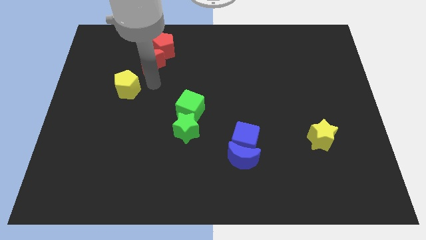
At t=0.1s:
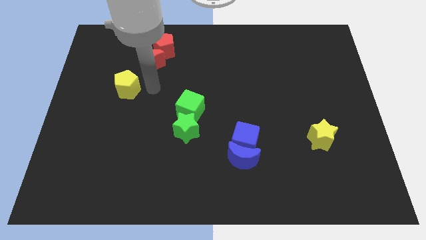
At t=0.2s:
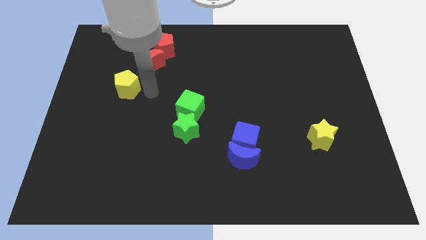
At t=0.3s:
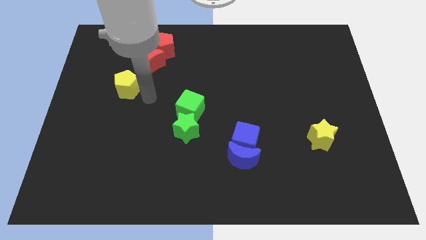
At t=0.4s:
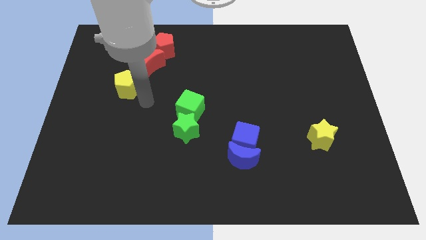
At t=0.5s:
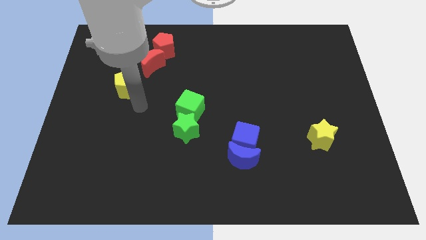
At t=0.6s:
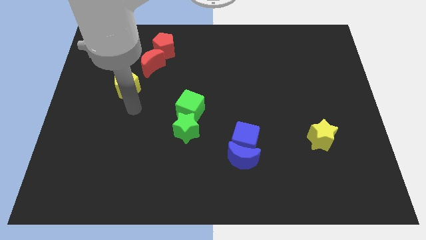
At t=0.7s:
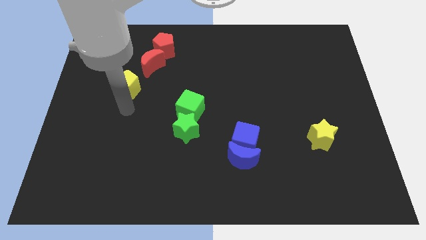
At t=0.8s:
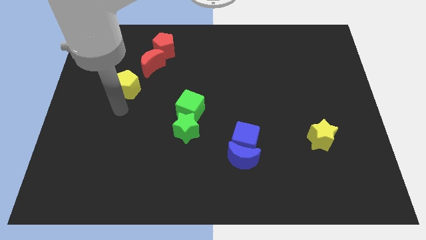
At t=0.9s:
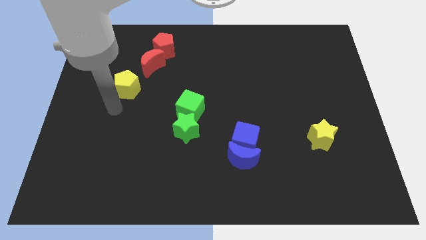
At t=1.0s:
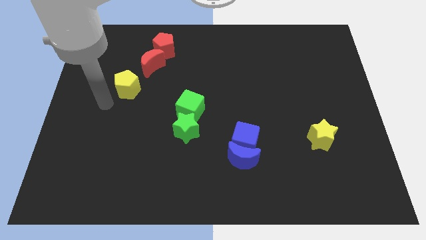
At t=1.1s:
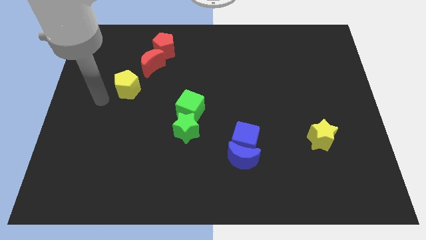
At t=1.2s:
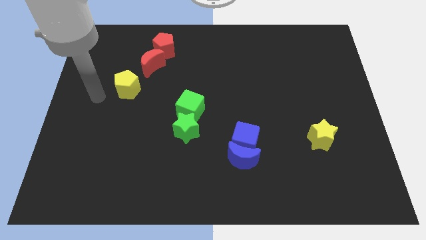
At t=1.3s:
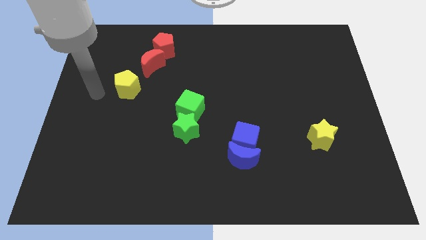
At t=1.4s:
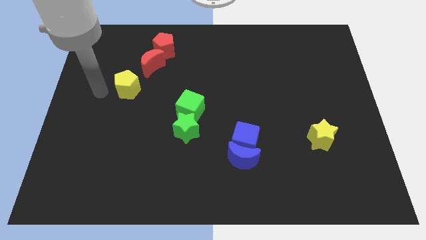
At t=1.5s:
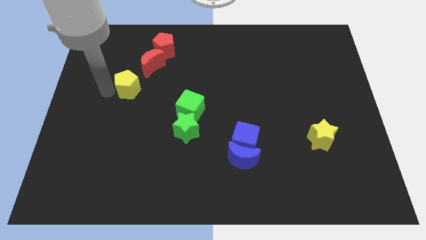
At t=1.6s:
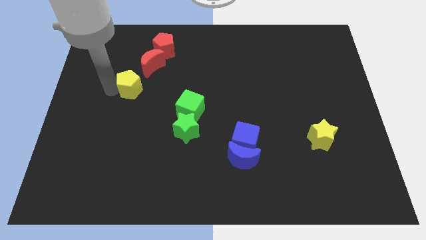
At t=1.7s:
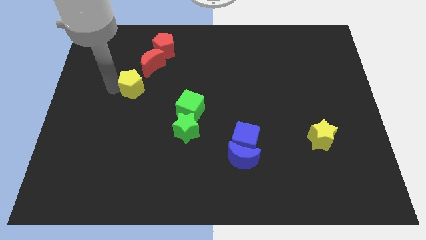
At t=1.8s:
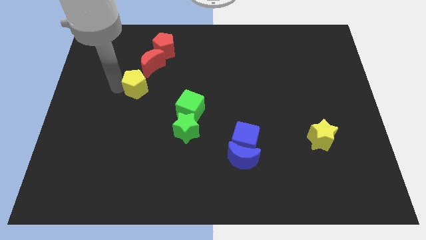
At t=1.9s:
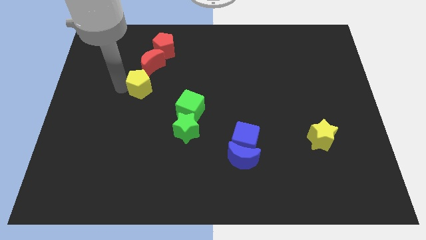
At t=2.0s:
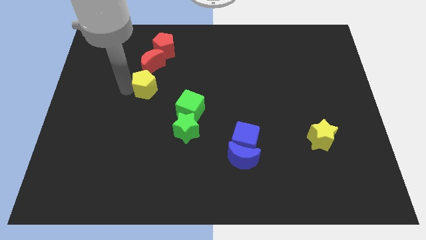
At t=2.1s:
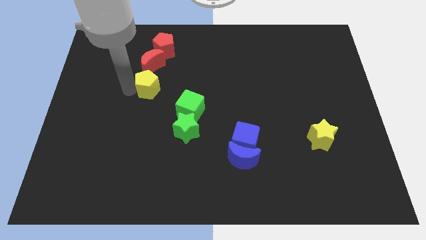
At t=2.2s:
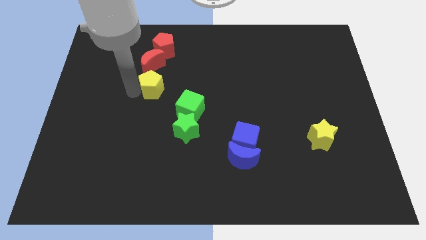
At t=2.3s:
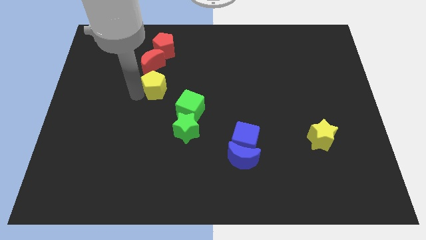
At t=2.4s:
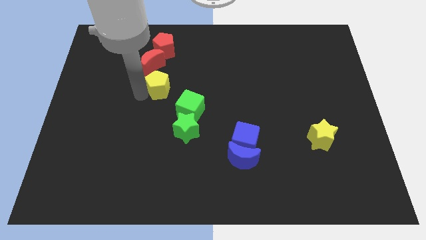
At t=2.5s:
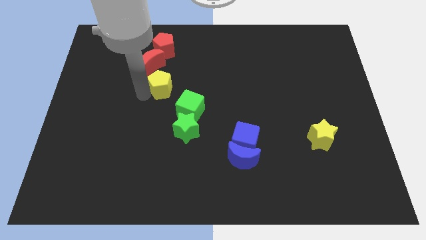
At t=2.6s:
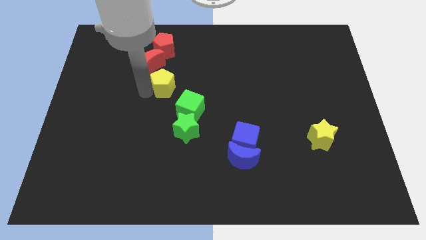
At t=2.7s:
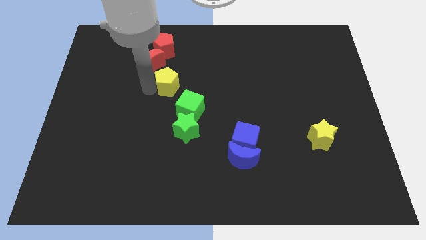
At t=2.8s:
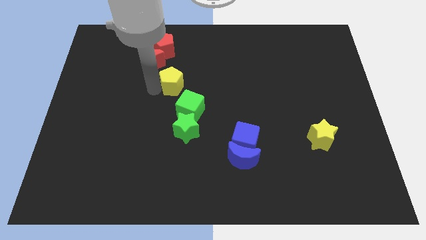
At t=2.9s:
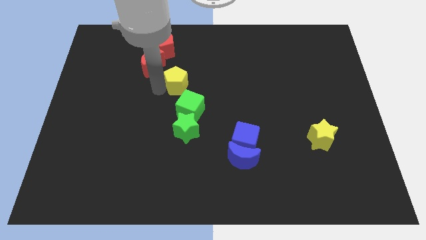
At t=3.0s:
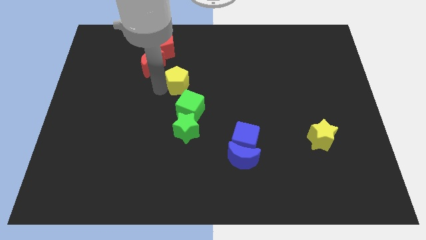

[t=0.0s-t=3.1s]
drag the yellow pentagon slight right side of the board

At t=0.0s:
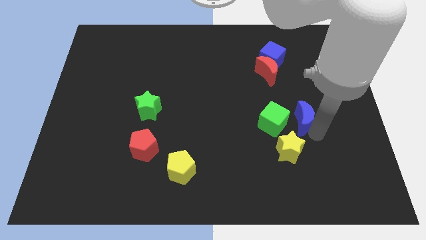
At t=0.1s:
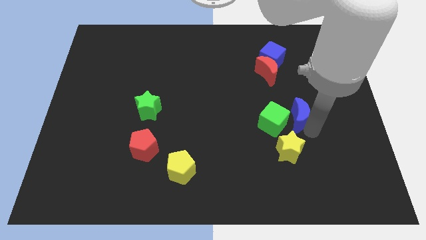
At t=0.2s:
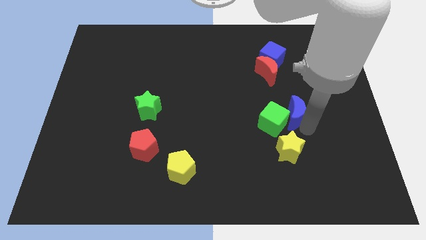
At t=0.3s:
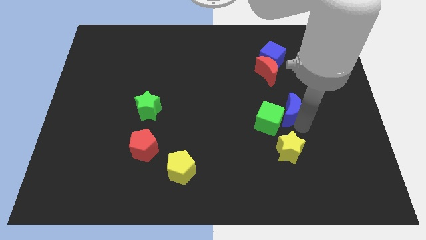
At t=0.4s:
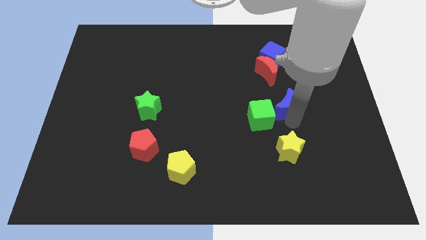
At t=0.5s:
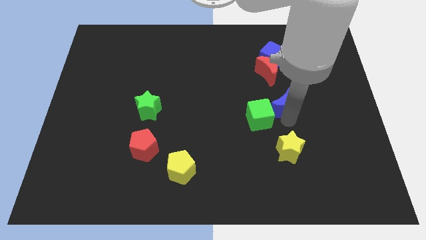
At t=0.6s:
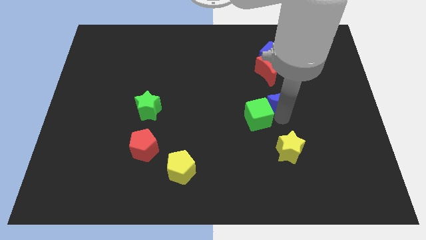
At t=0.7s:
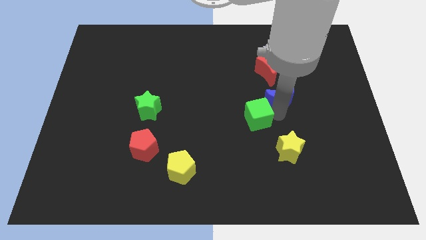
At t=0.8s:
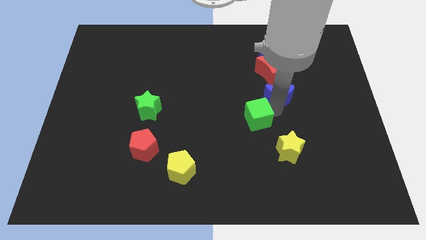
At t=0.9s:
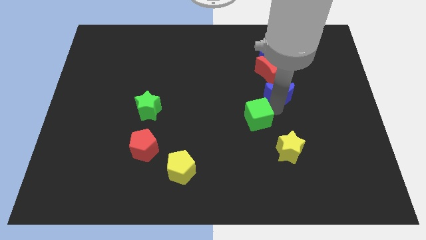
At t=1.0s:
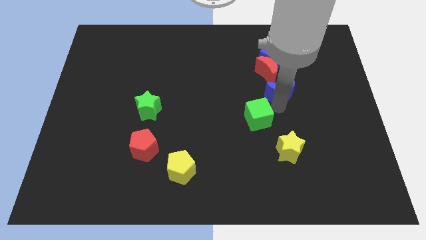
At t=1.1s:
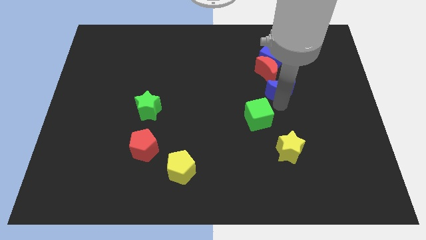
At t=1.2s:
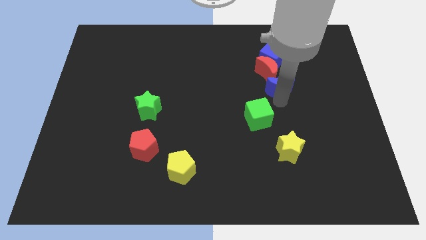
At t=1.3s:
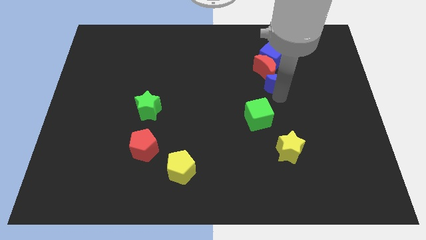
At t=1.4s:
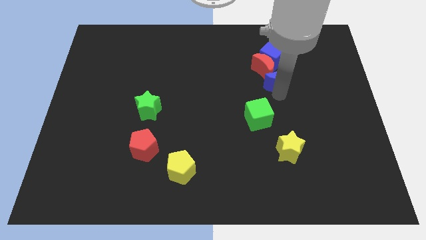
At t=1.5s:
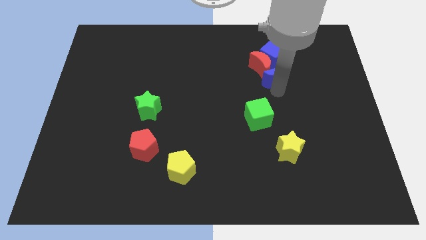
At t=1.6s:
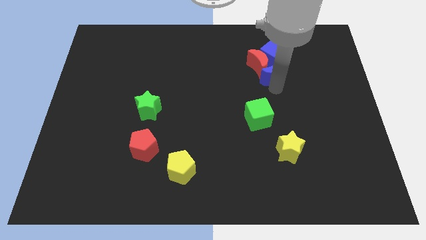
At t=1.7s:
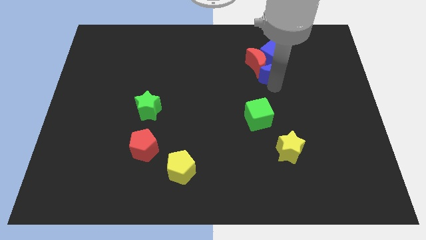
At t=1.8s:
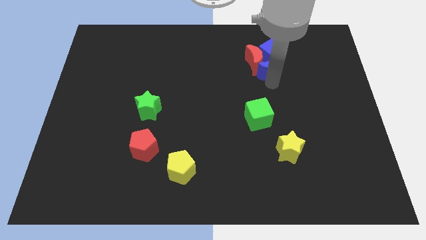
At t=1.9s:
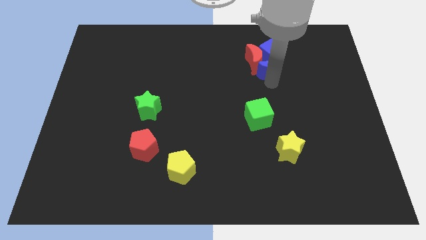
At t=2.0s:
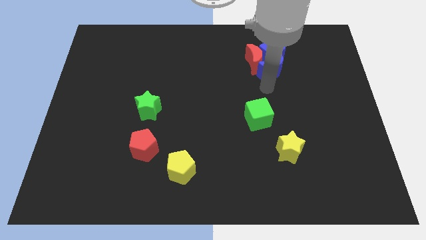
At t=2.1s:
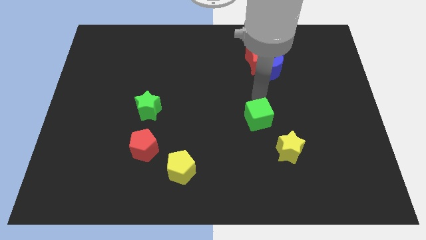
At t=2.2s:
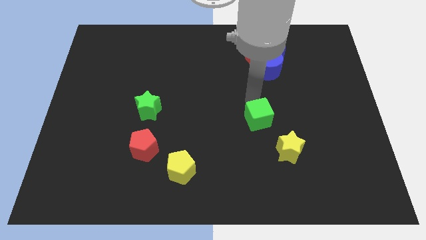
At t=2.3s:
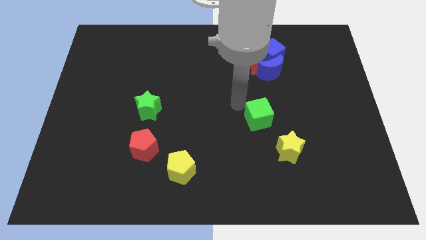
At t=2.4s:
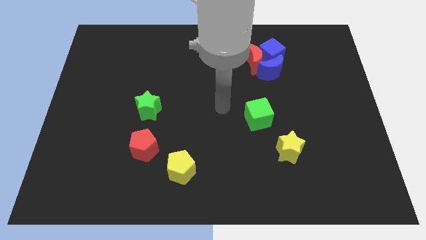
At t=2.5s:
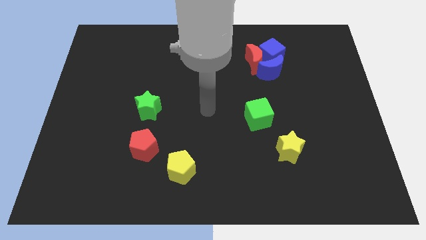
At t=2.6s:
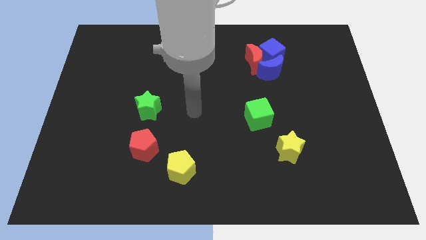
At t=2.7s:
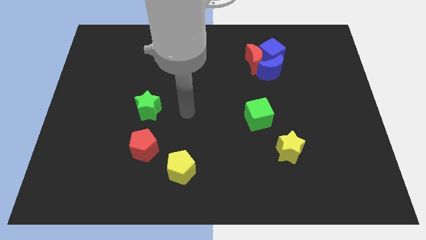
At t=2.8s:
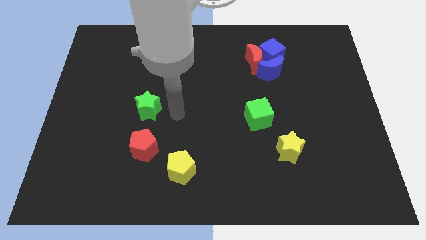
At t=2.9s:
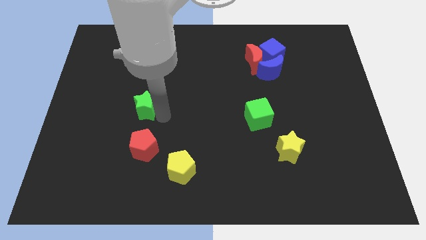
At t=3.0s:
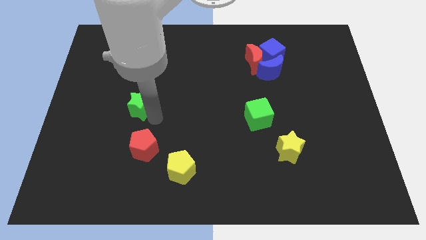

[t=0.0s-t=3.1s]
place the blue moon vertically below the blue cube

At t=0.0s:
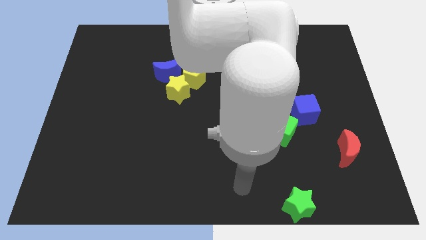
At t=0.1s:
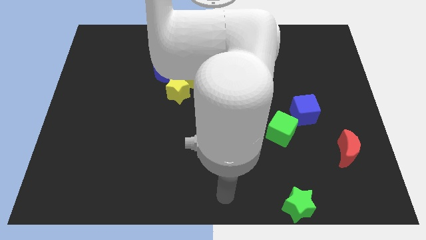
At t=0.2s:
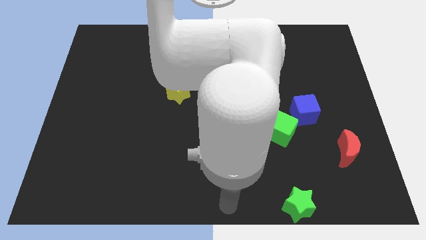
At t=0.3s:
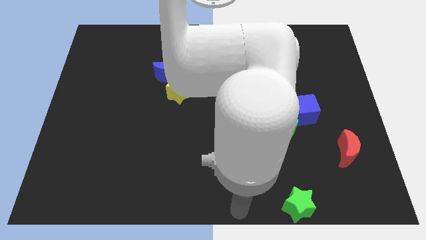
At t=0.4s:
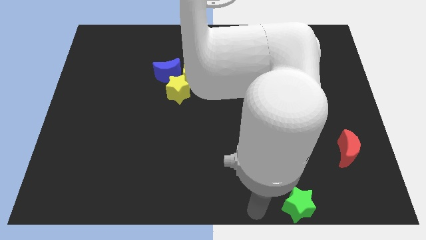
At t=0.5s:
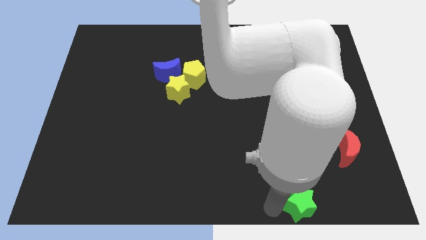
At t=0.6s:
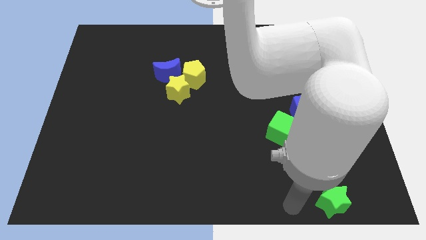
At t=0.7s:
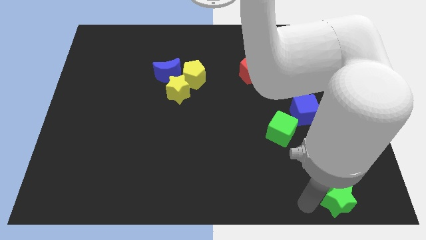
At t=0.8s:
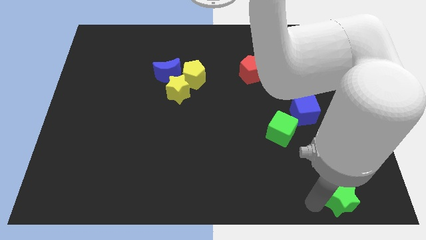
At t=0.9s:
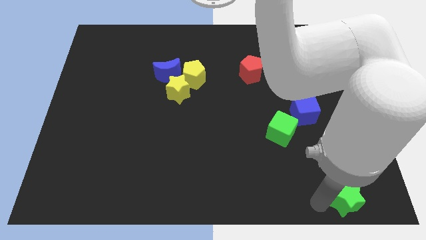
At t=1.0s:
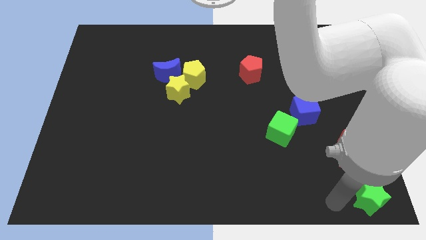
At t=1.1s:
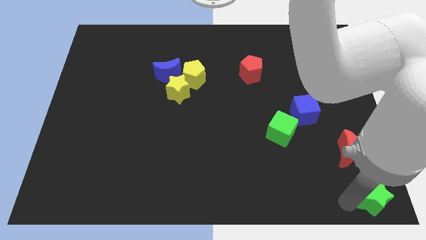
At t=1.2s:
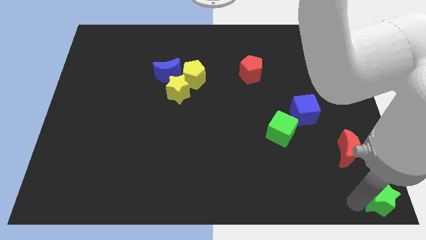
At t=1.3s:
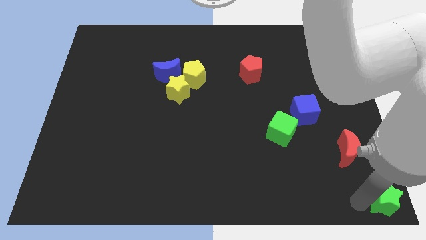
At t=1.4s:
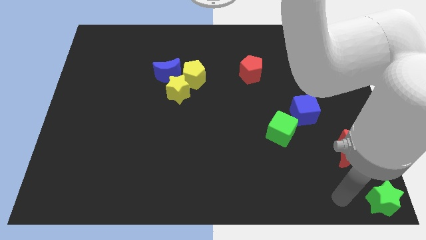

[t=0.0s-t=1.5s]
move the green star to the bottom right corner

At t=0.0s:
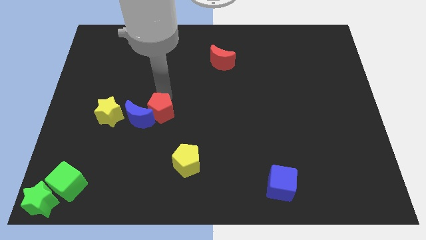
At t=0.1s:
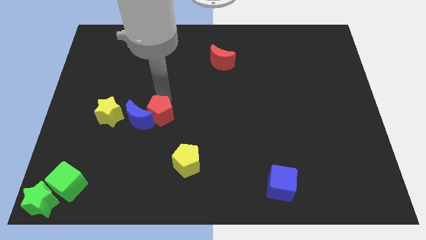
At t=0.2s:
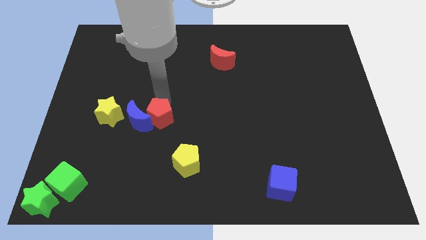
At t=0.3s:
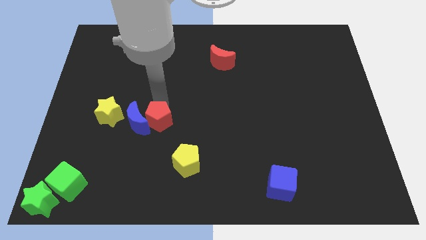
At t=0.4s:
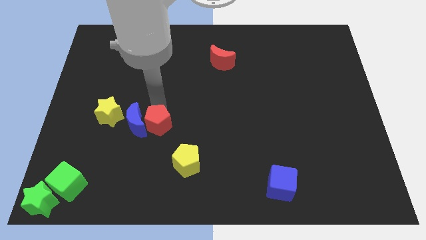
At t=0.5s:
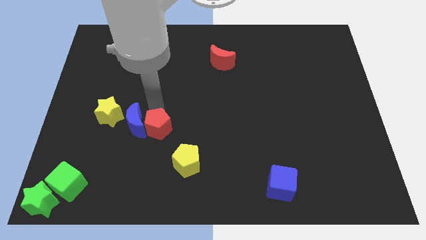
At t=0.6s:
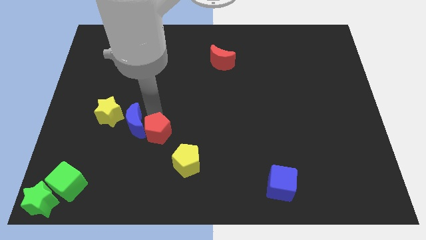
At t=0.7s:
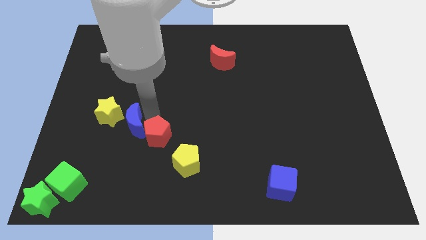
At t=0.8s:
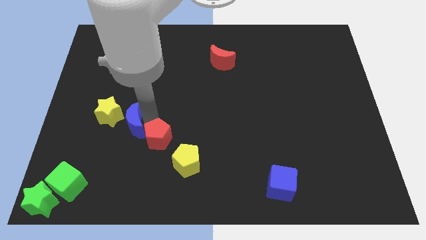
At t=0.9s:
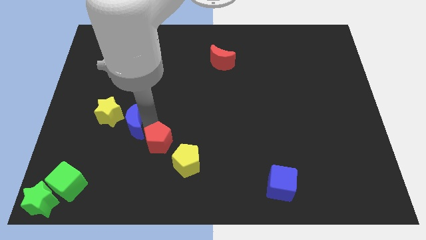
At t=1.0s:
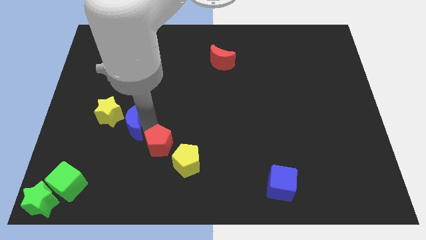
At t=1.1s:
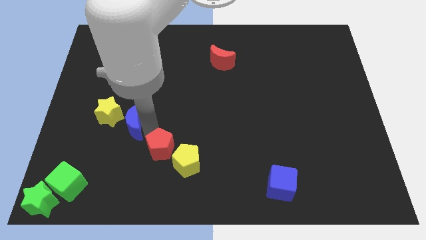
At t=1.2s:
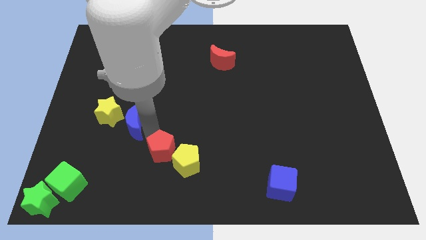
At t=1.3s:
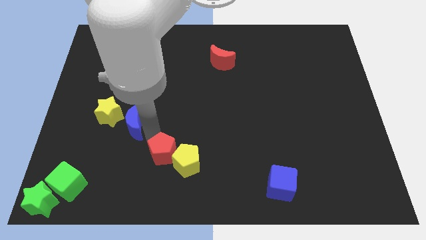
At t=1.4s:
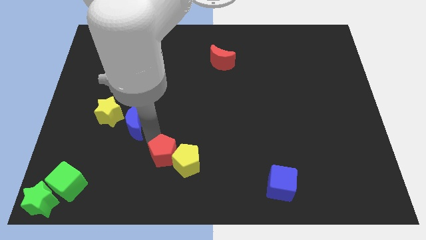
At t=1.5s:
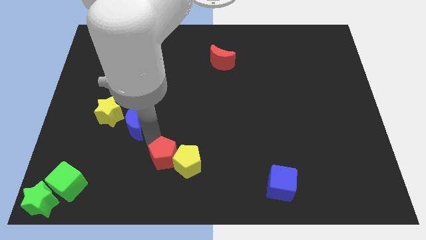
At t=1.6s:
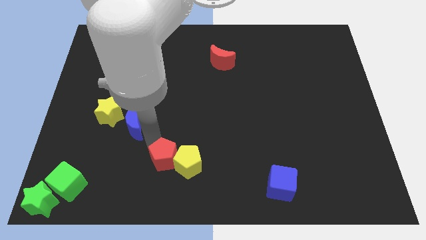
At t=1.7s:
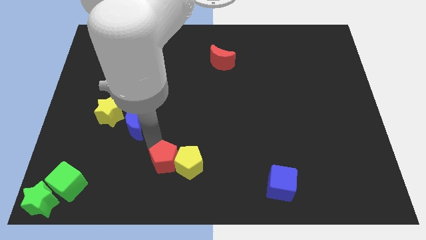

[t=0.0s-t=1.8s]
push the red pentagon left to the yellow pentagon
